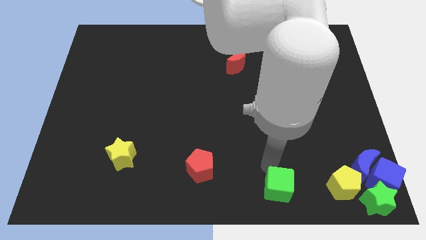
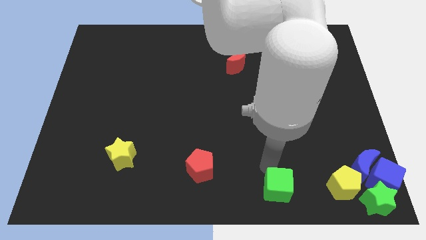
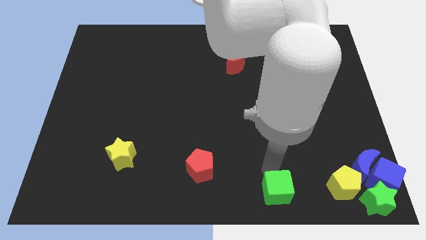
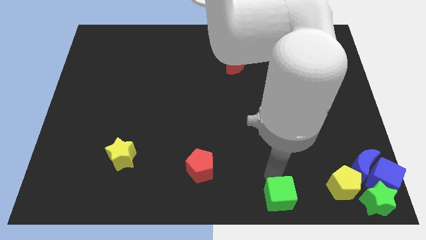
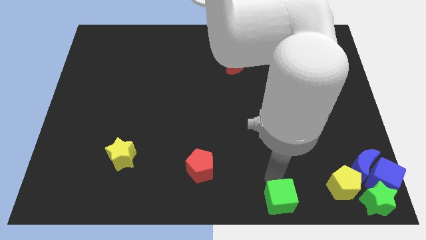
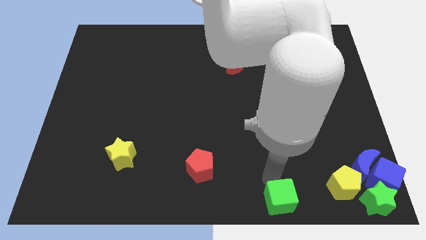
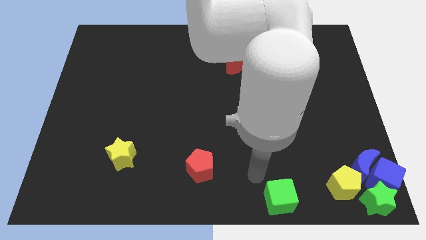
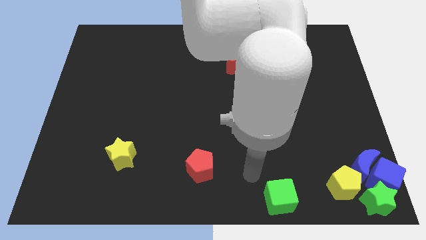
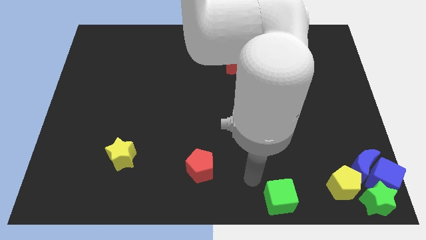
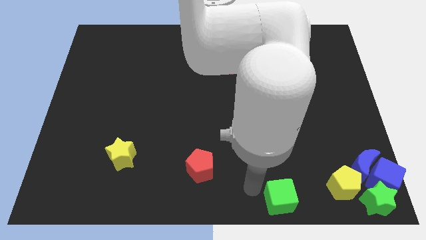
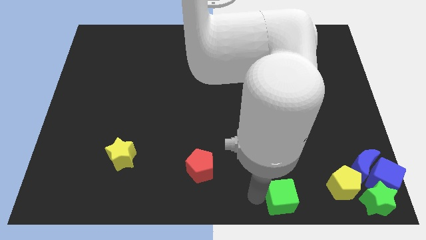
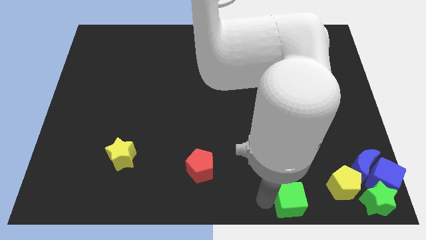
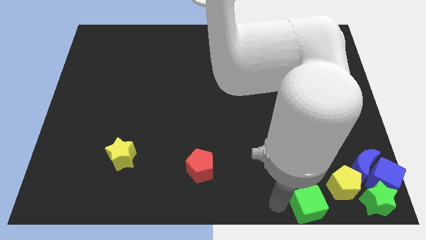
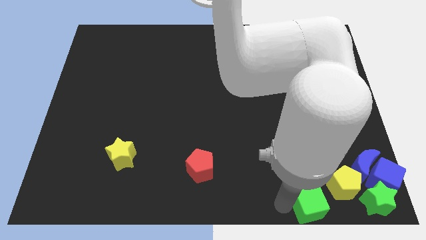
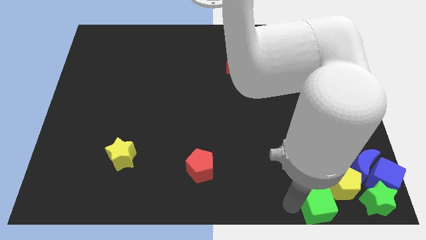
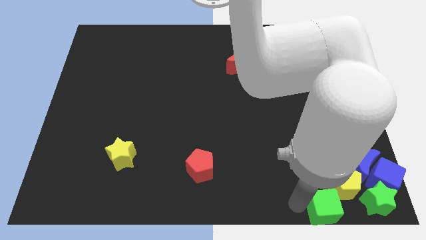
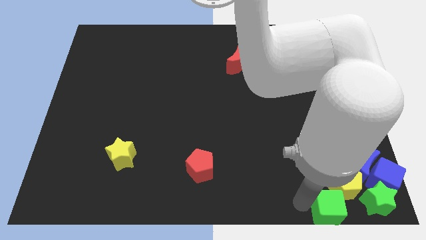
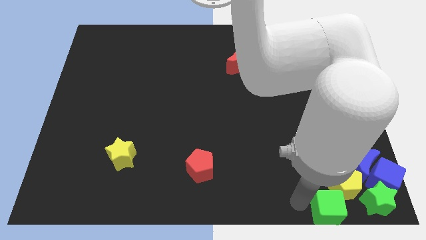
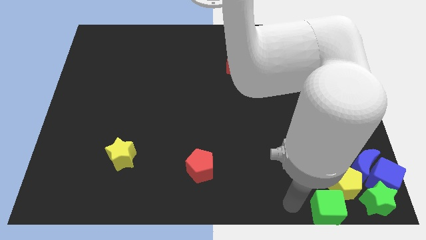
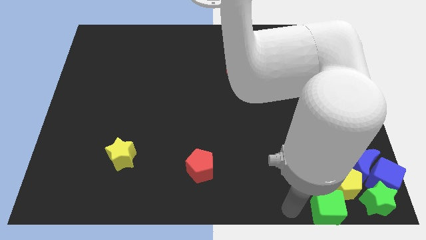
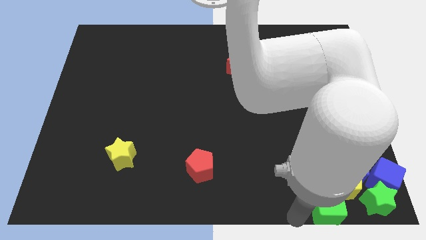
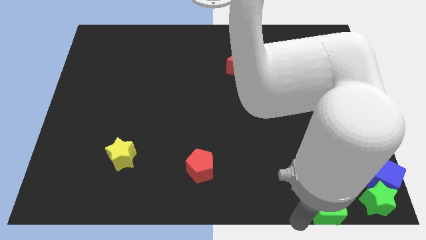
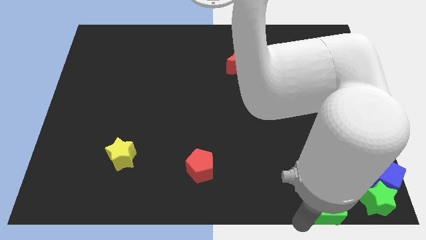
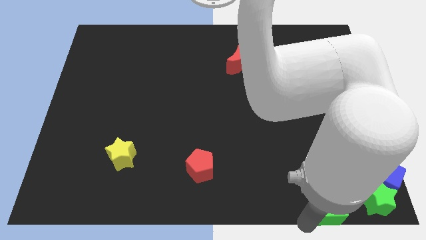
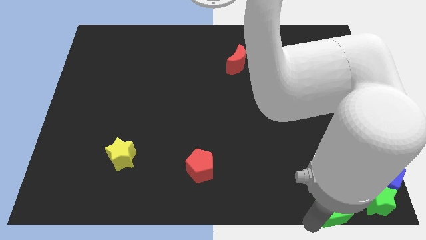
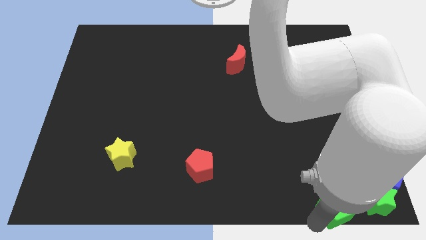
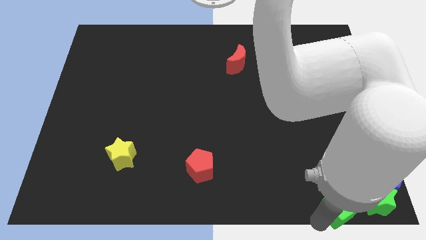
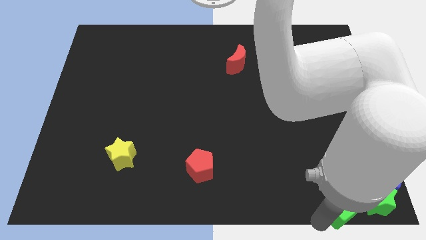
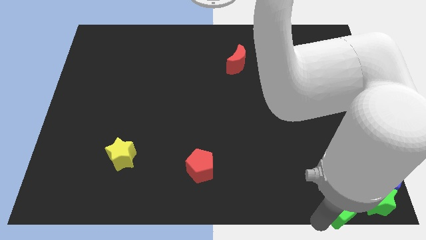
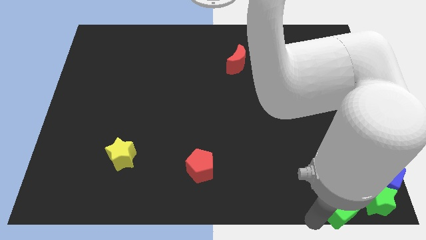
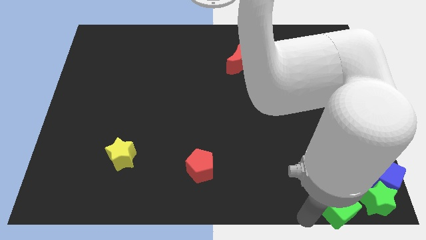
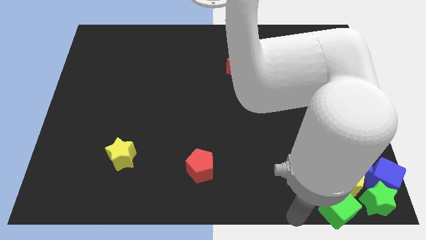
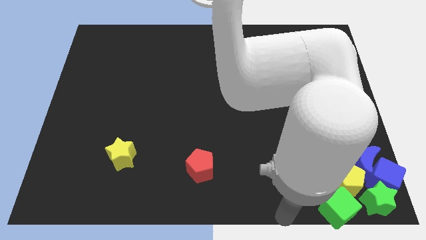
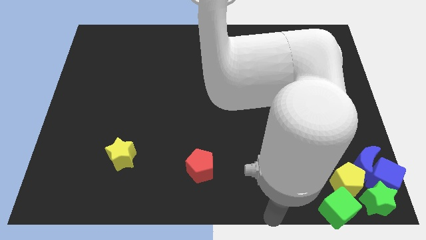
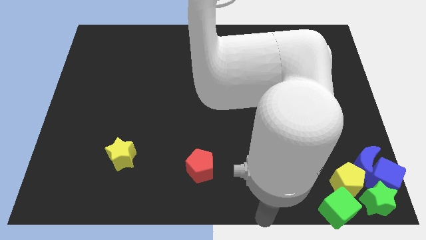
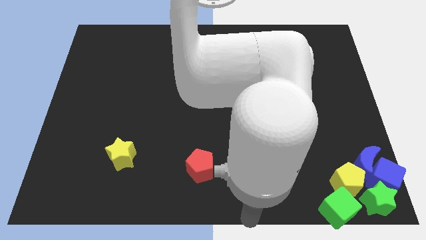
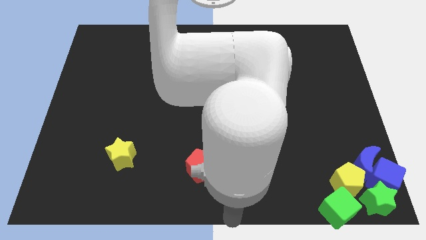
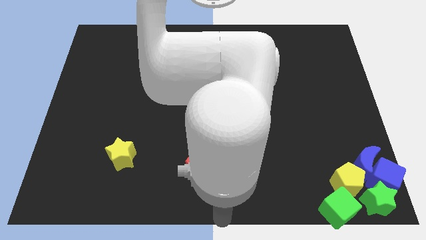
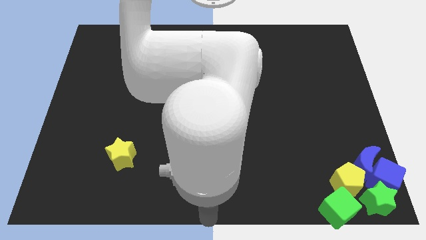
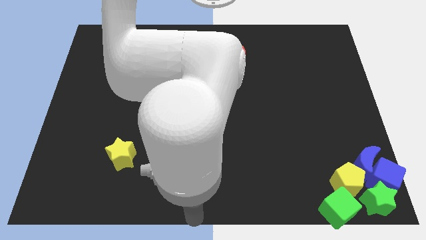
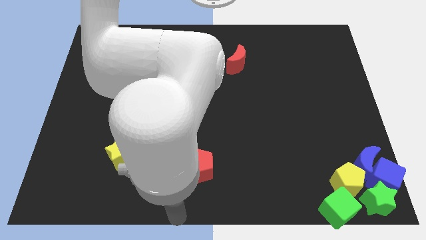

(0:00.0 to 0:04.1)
move green cube into yellow pentagon

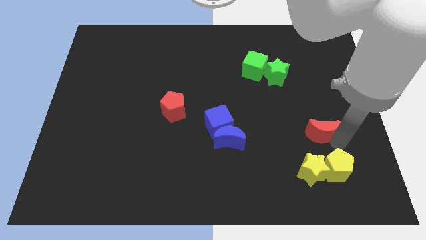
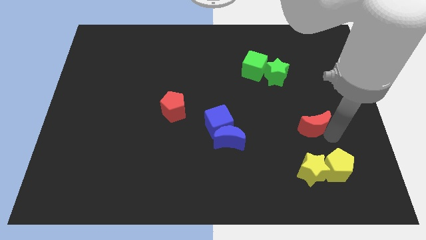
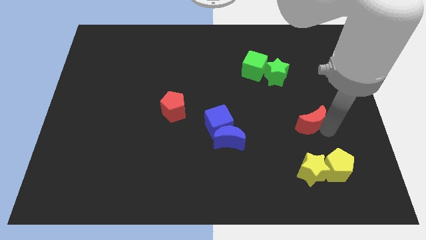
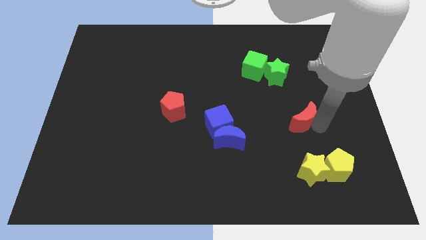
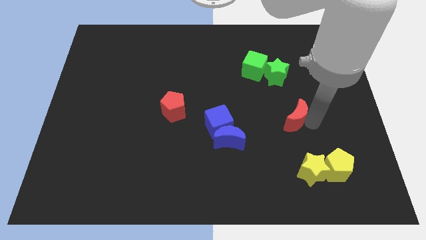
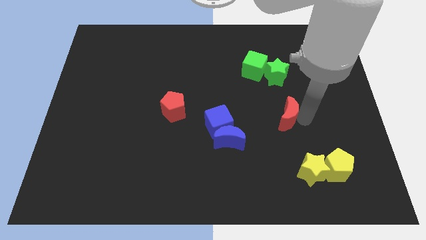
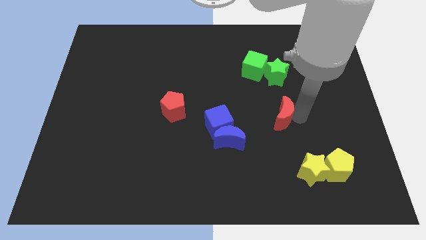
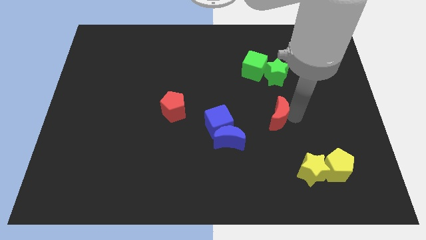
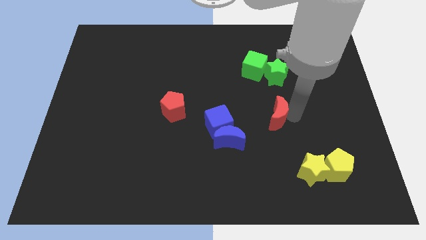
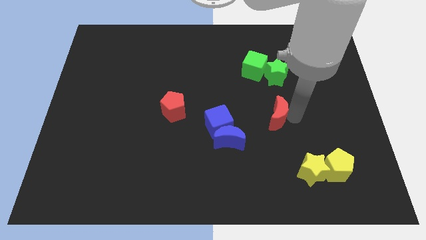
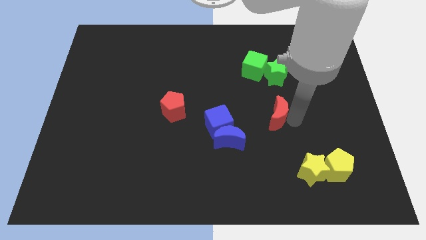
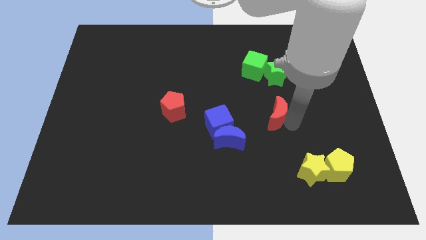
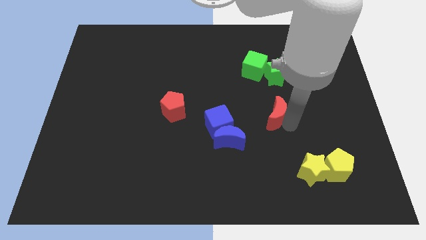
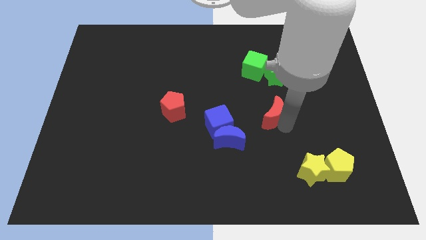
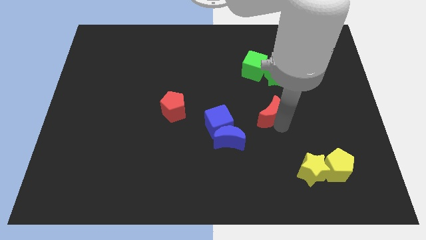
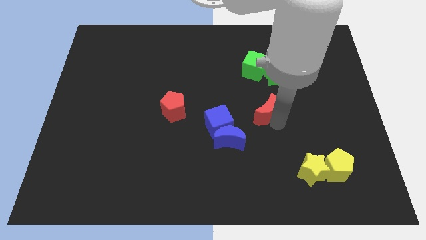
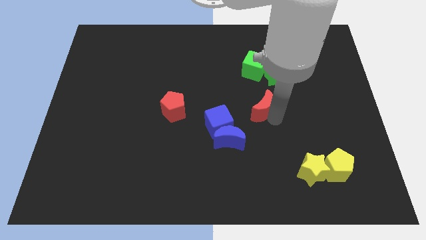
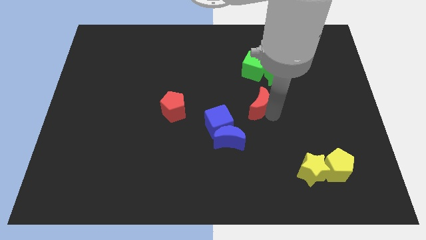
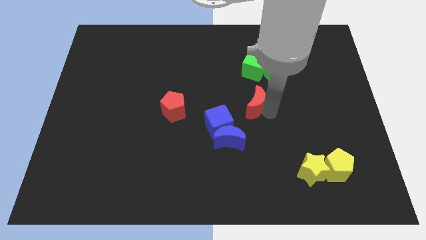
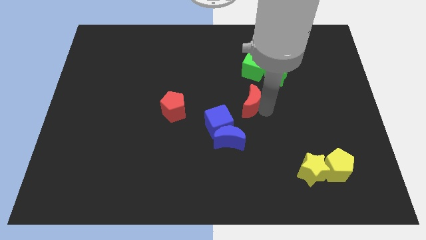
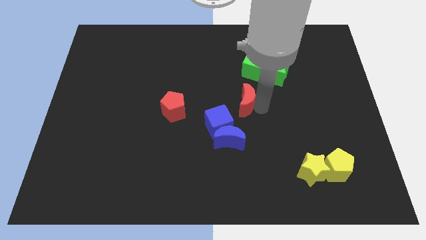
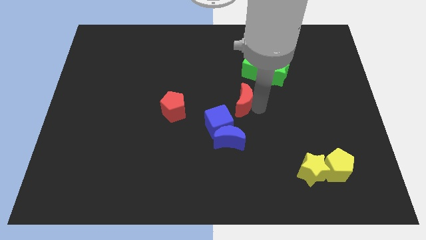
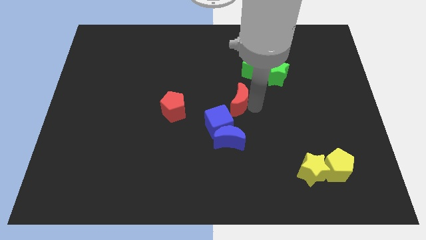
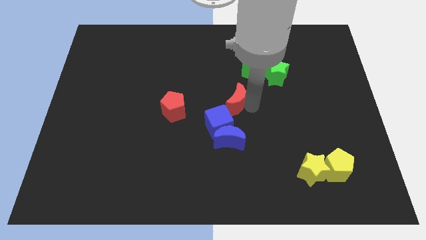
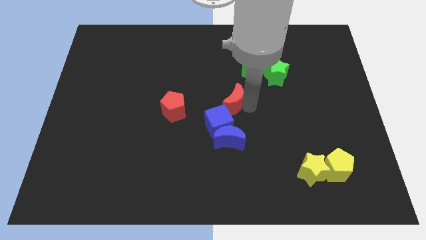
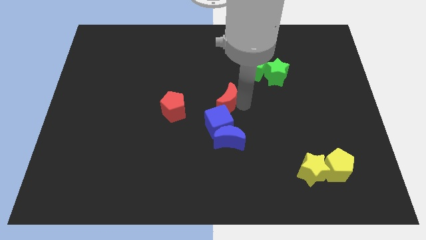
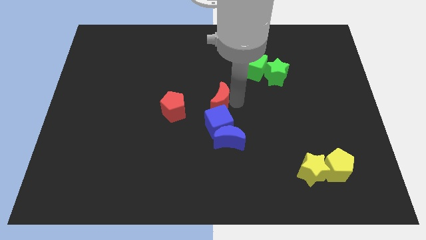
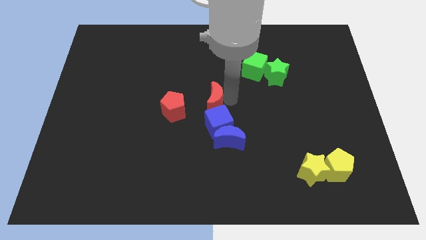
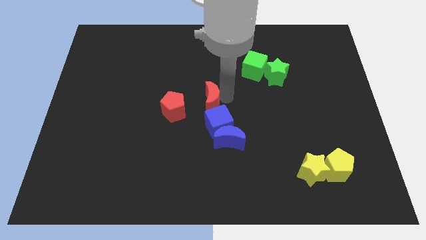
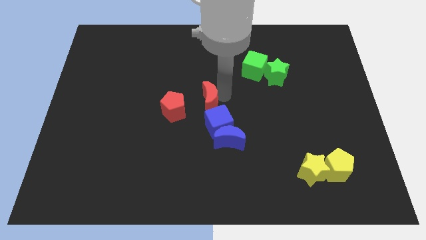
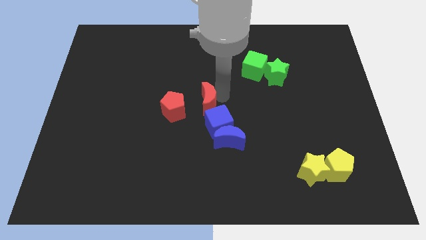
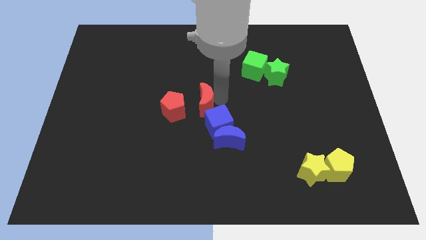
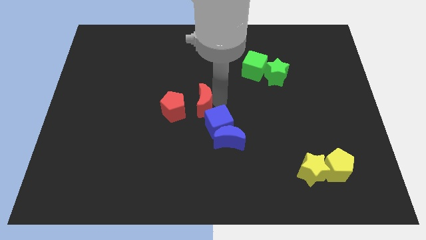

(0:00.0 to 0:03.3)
move the red crescent to the center of the board

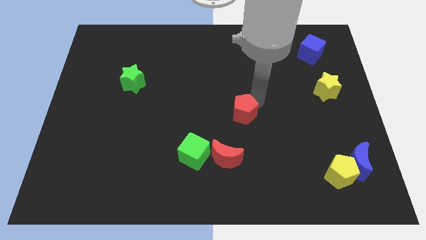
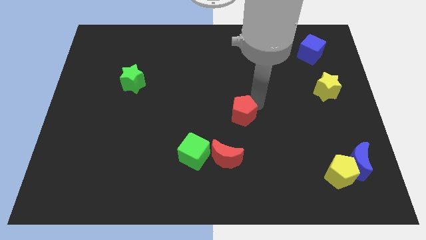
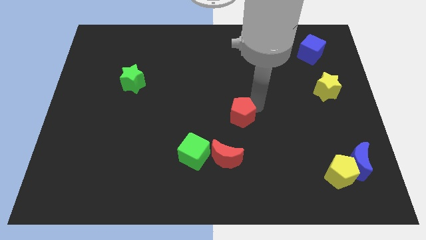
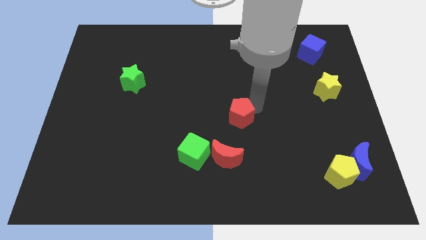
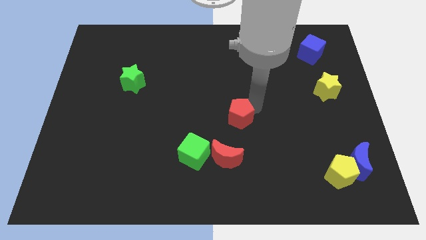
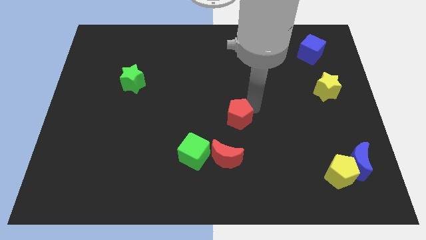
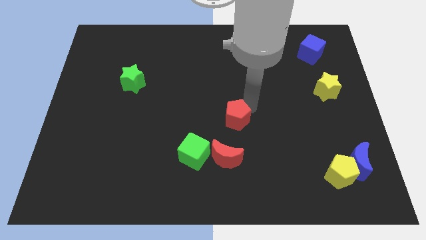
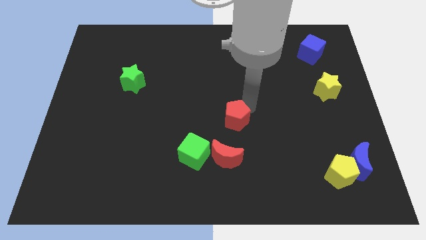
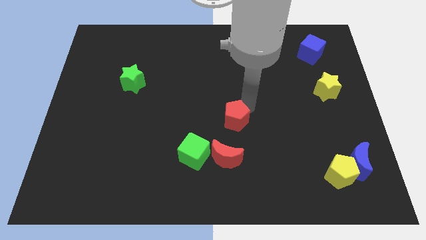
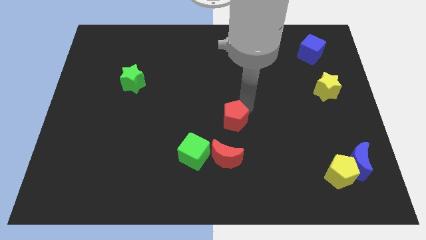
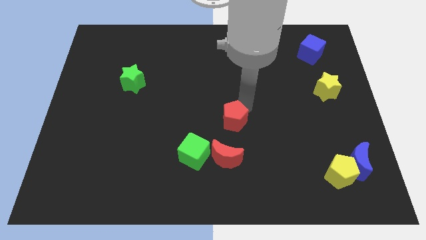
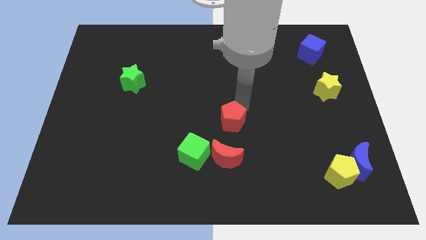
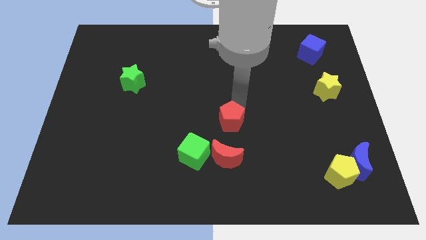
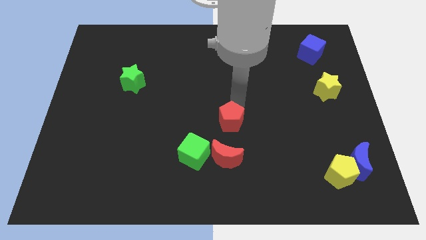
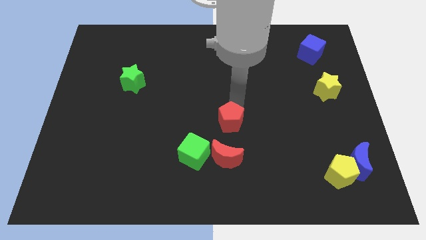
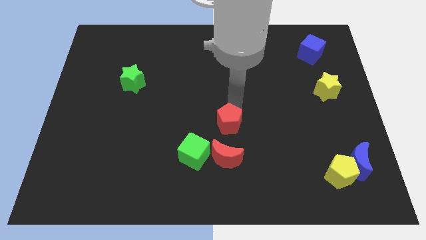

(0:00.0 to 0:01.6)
put the red pentagon vertically above the red moon
